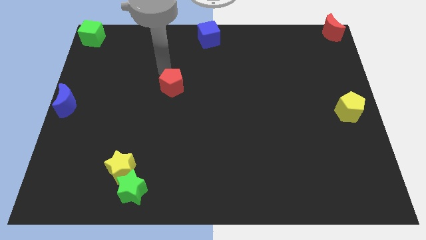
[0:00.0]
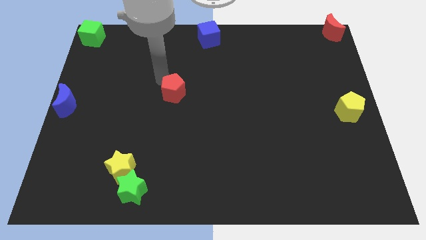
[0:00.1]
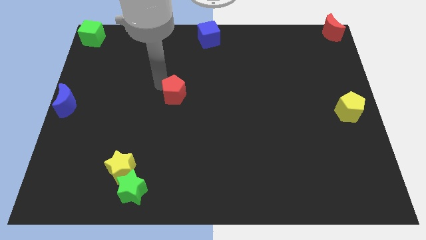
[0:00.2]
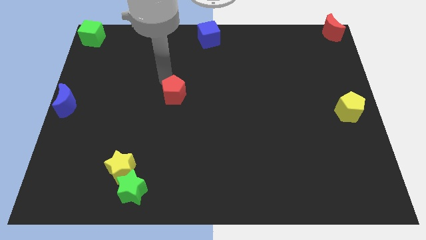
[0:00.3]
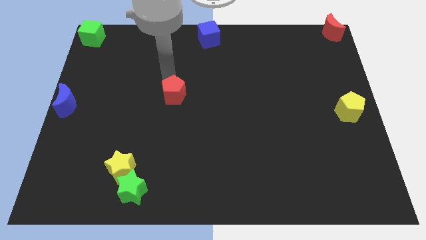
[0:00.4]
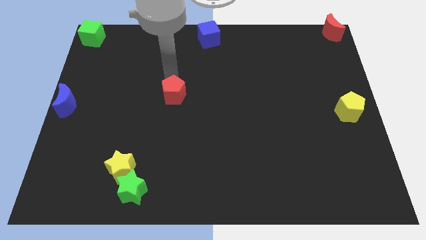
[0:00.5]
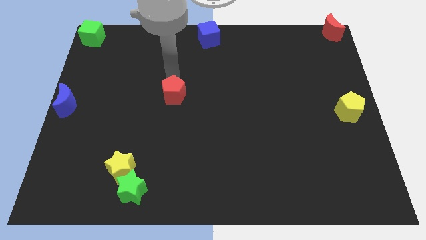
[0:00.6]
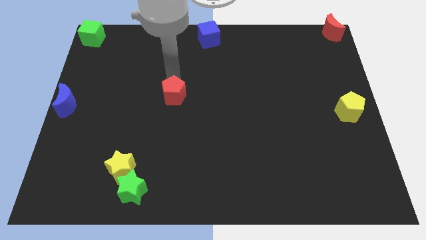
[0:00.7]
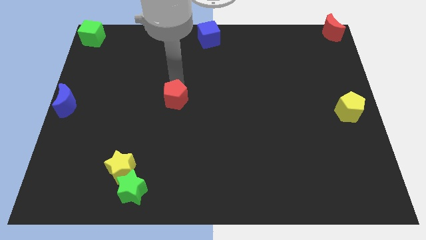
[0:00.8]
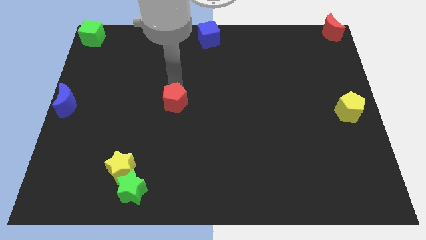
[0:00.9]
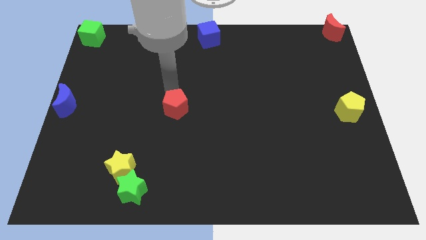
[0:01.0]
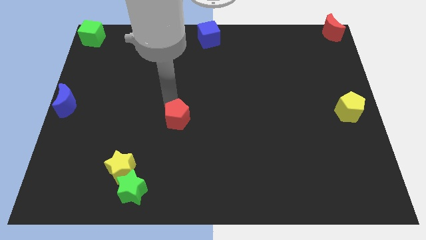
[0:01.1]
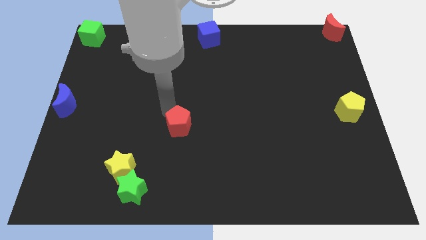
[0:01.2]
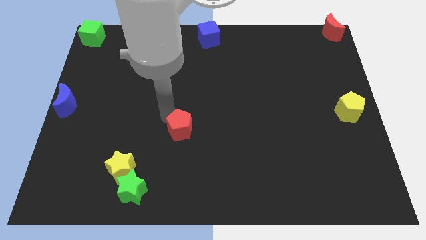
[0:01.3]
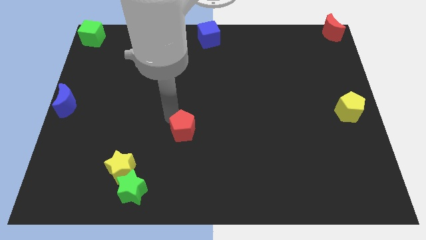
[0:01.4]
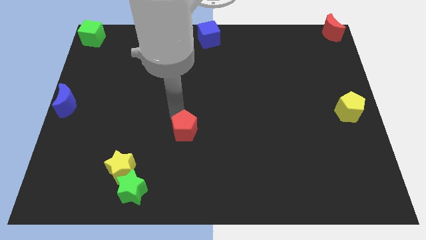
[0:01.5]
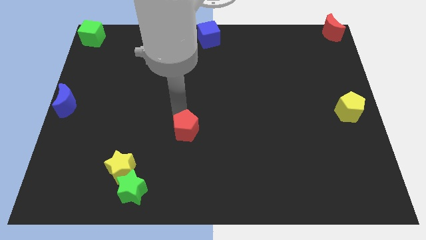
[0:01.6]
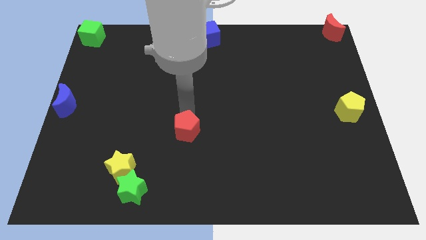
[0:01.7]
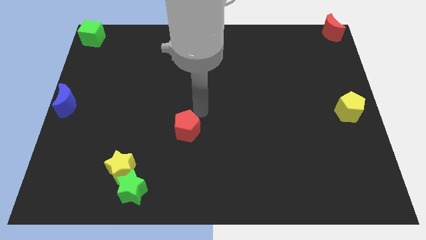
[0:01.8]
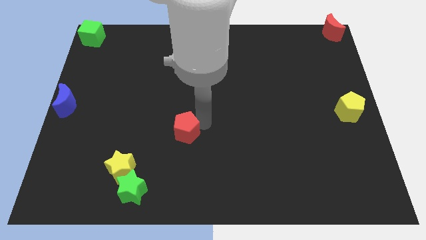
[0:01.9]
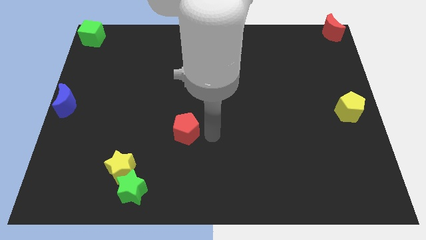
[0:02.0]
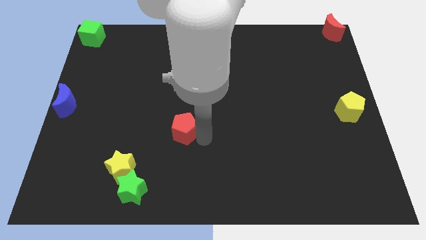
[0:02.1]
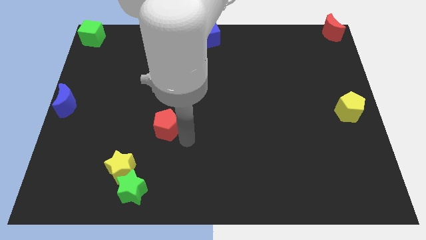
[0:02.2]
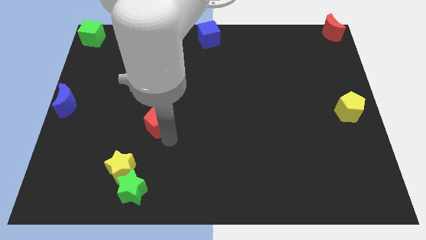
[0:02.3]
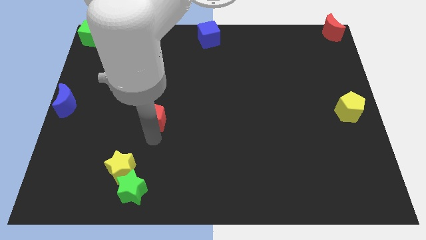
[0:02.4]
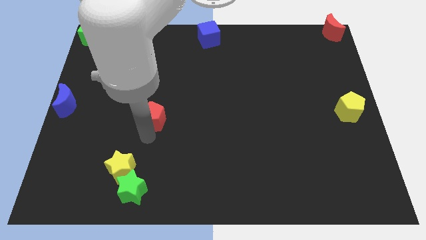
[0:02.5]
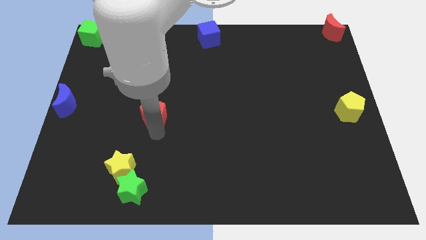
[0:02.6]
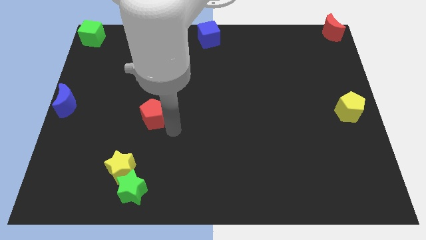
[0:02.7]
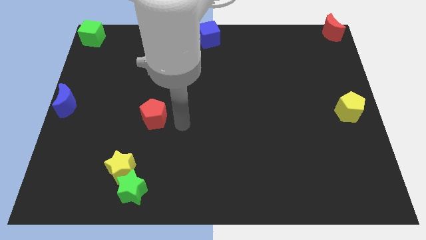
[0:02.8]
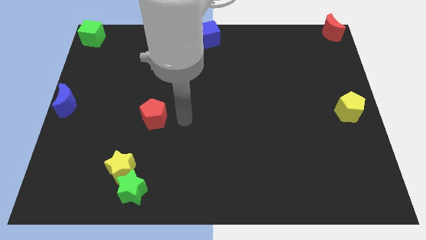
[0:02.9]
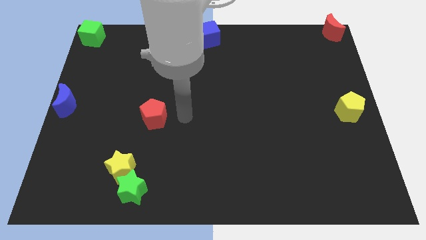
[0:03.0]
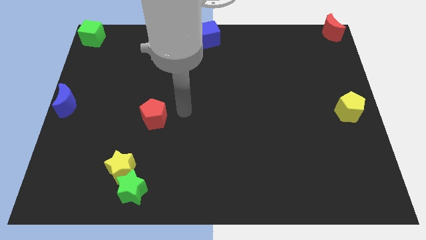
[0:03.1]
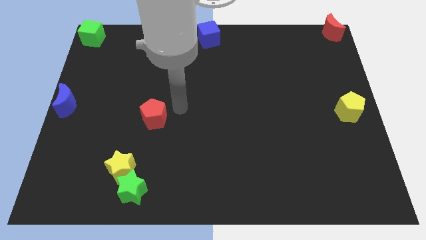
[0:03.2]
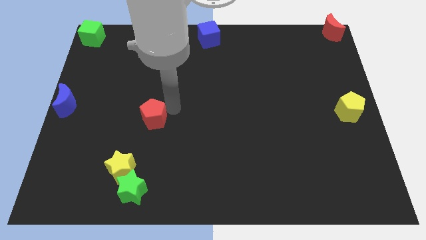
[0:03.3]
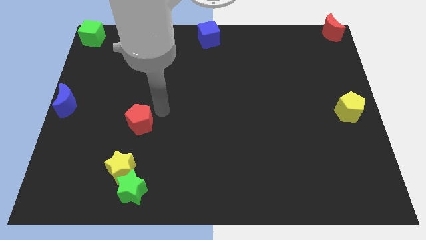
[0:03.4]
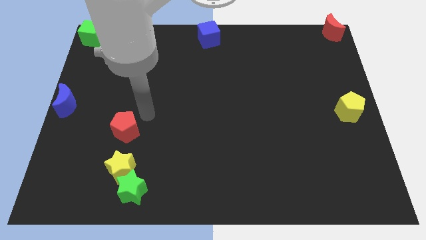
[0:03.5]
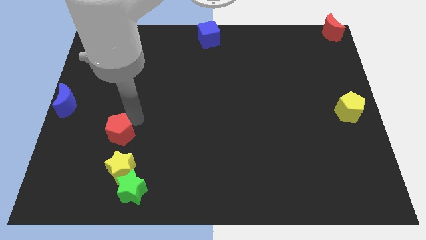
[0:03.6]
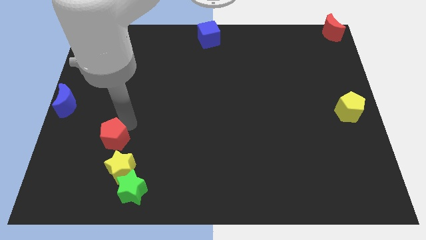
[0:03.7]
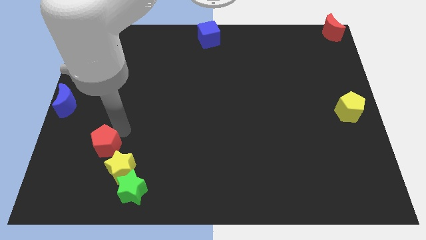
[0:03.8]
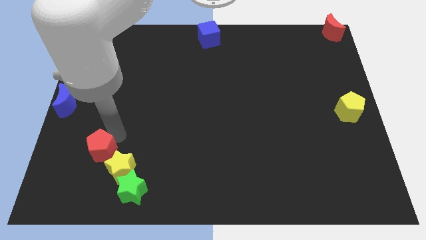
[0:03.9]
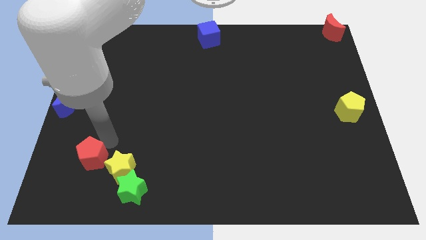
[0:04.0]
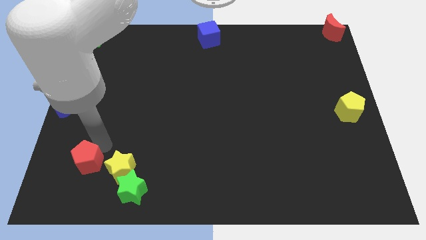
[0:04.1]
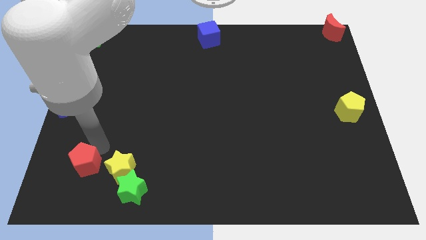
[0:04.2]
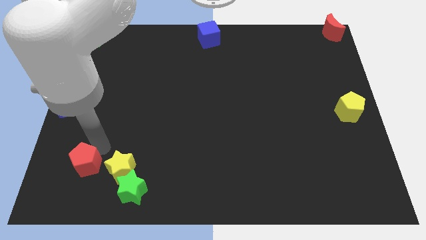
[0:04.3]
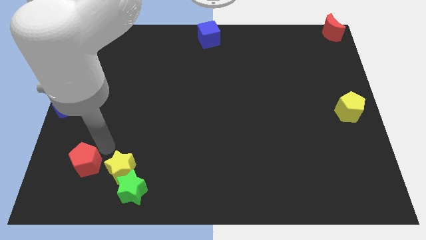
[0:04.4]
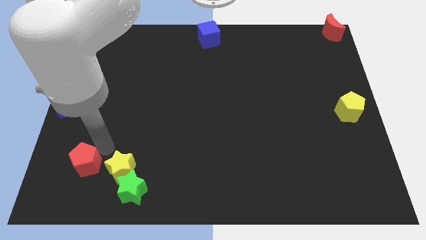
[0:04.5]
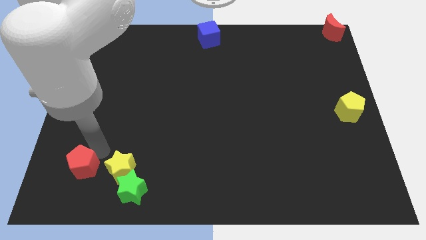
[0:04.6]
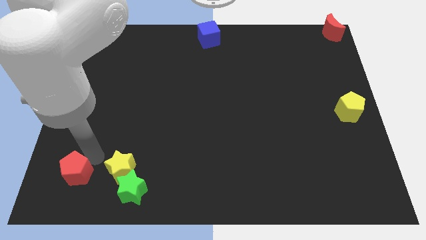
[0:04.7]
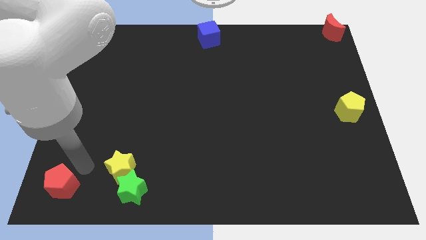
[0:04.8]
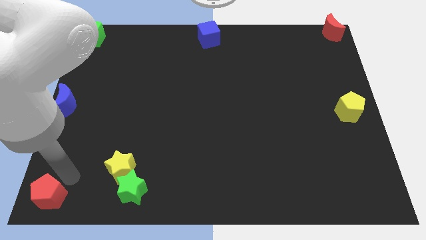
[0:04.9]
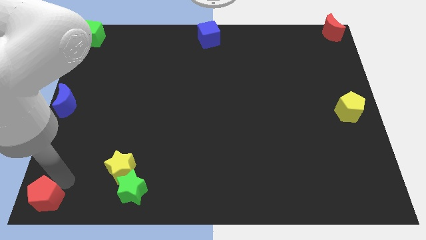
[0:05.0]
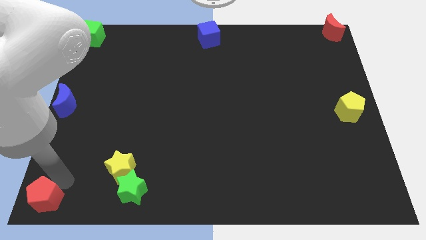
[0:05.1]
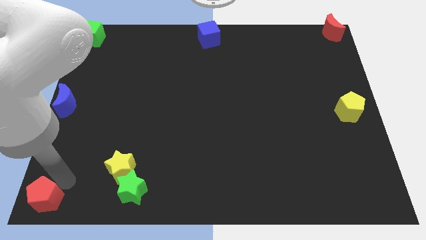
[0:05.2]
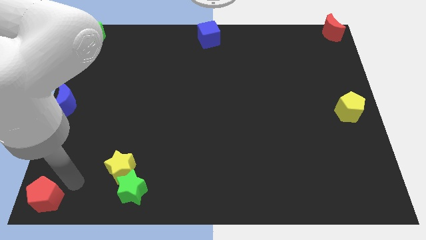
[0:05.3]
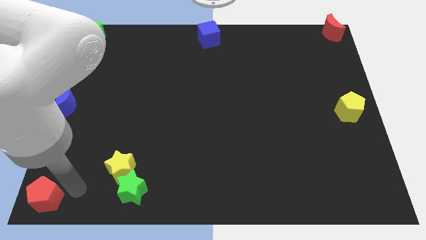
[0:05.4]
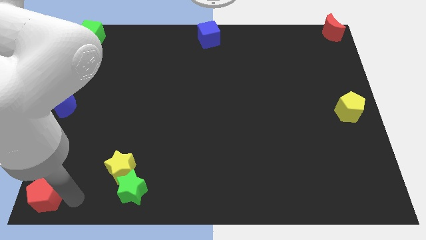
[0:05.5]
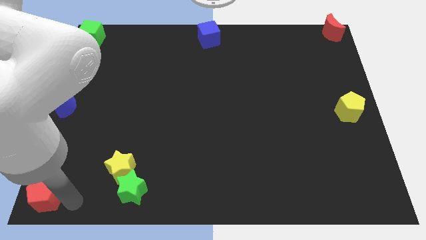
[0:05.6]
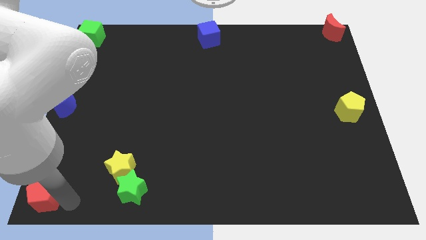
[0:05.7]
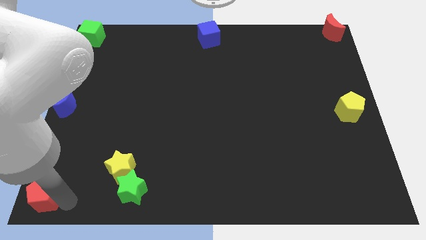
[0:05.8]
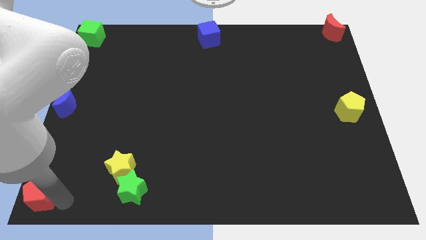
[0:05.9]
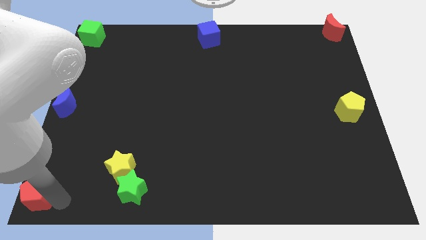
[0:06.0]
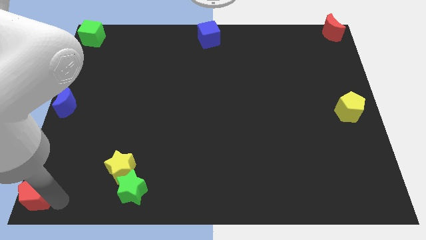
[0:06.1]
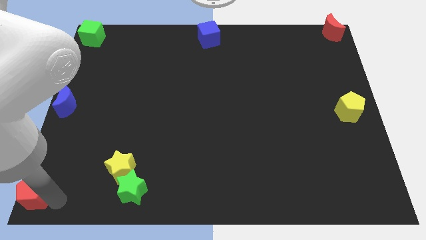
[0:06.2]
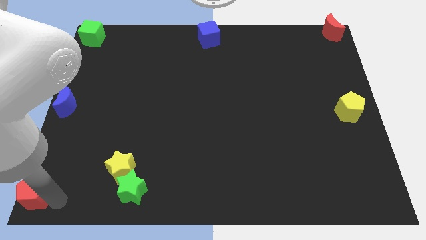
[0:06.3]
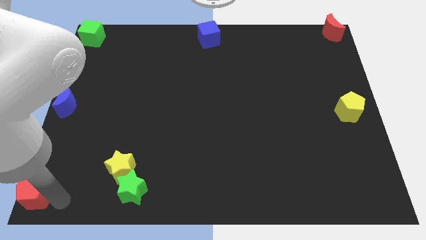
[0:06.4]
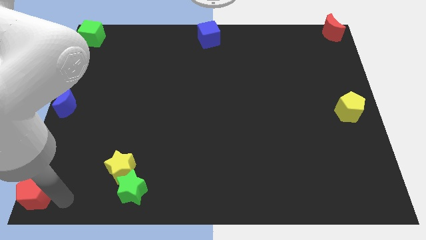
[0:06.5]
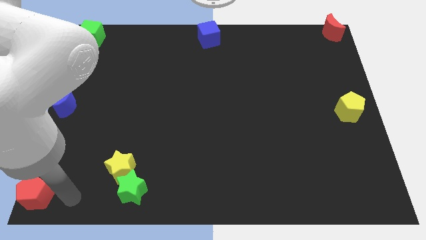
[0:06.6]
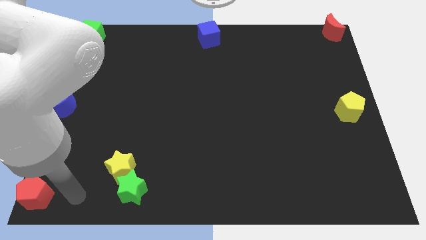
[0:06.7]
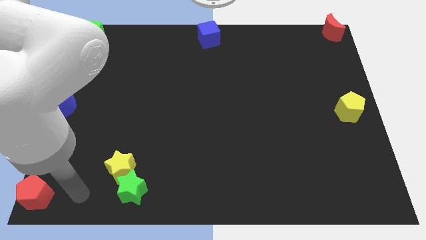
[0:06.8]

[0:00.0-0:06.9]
move red pentagon to the bottom left corner of the board

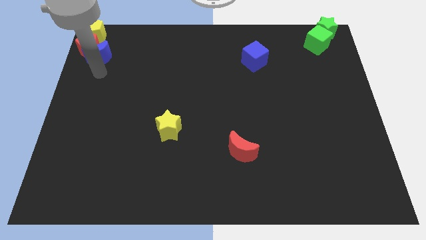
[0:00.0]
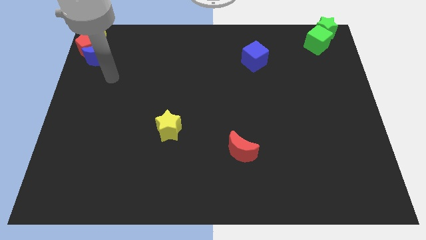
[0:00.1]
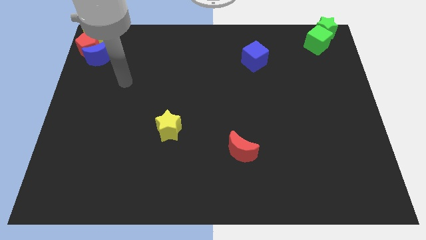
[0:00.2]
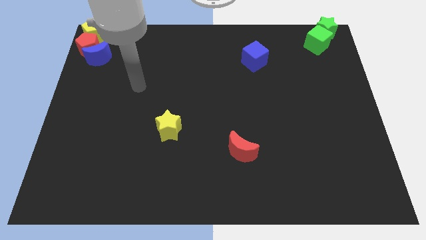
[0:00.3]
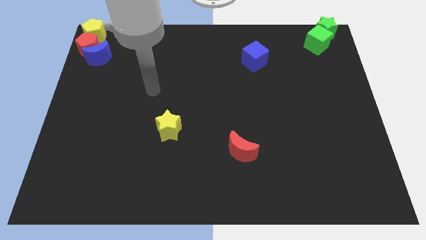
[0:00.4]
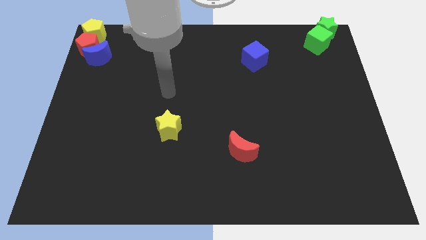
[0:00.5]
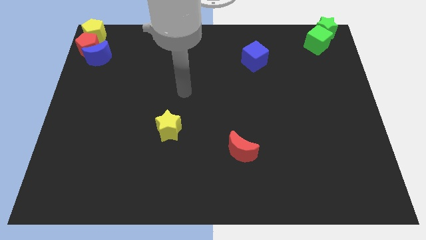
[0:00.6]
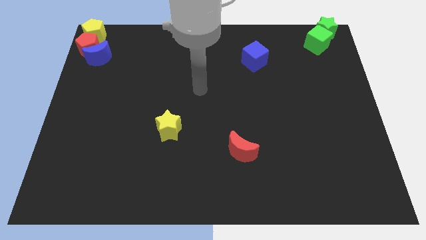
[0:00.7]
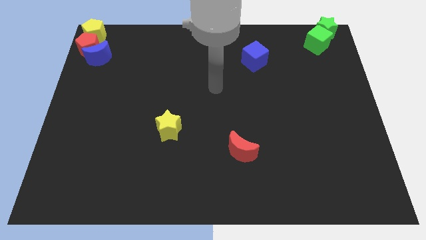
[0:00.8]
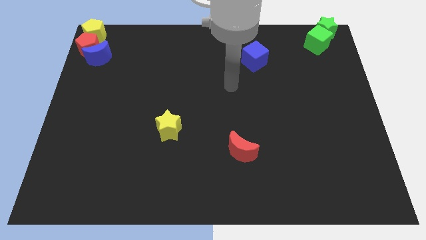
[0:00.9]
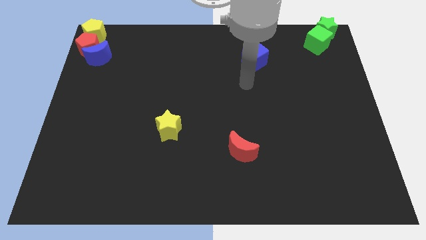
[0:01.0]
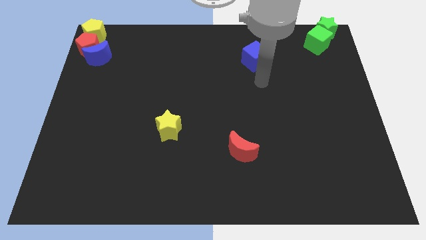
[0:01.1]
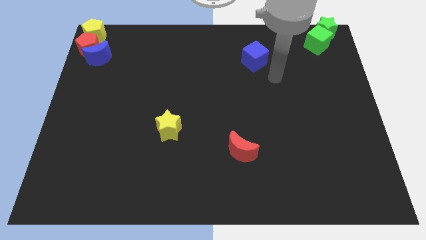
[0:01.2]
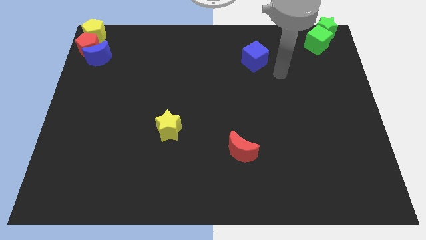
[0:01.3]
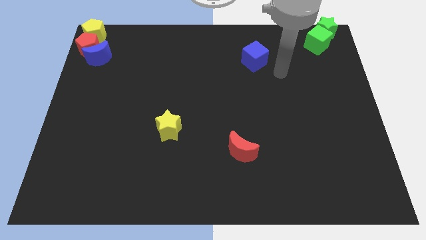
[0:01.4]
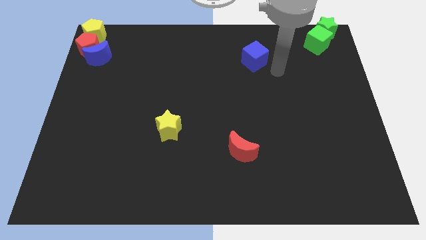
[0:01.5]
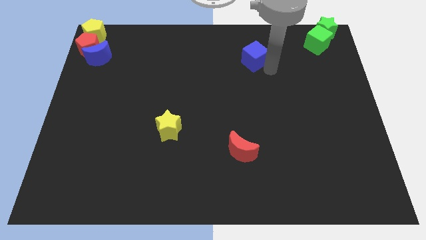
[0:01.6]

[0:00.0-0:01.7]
point your arm at the right of the blue cube

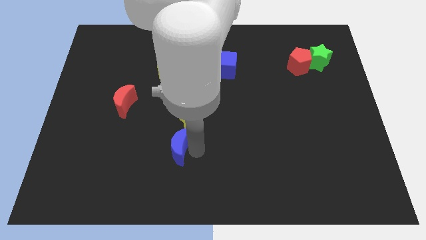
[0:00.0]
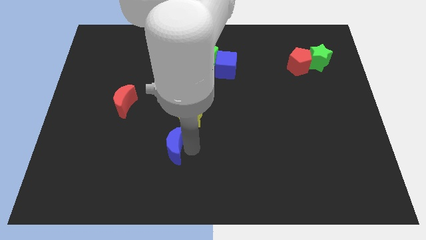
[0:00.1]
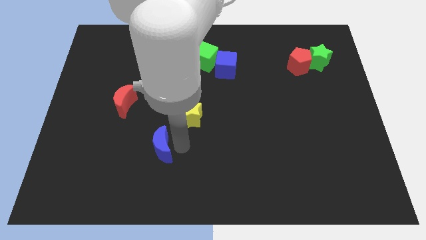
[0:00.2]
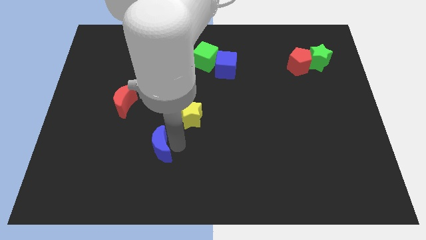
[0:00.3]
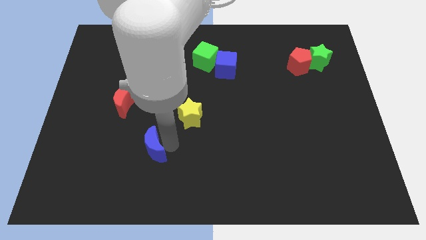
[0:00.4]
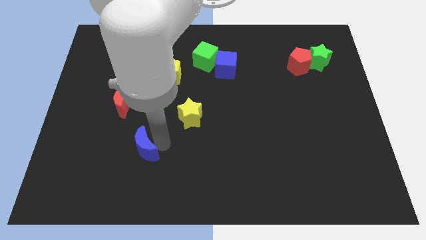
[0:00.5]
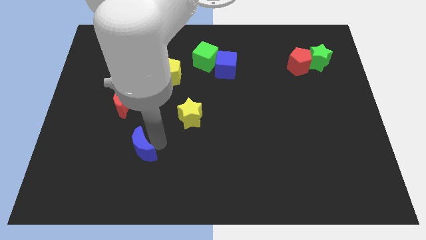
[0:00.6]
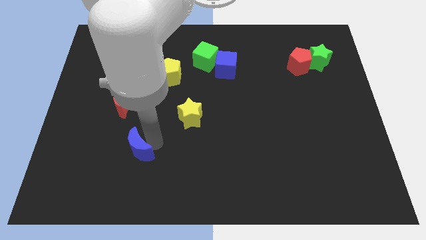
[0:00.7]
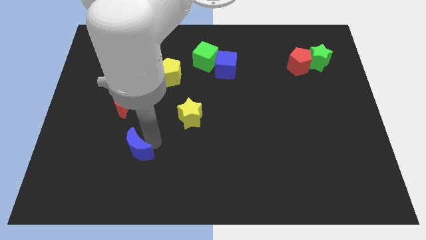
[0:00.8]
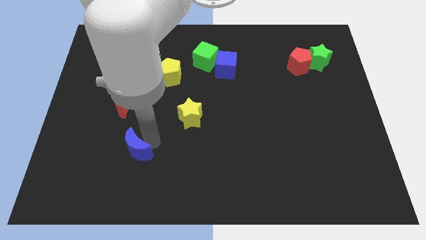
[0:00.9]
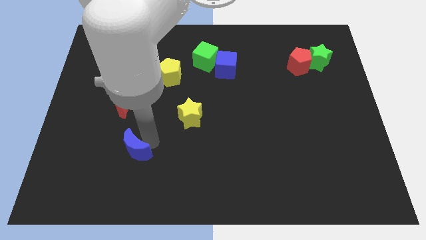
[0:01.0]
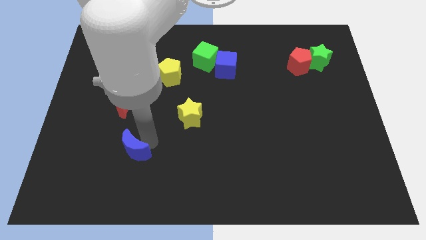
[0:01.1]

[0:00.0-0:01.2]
move blue moon left side
